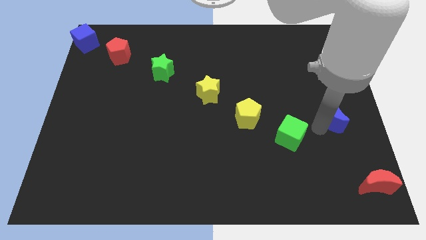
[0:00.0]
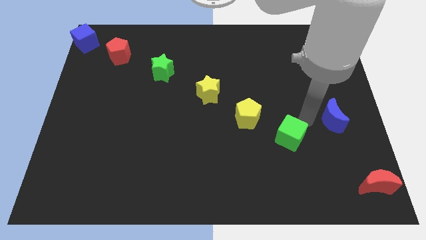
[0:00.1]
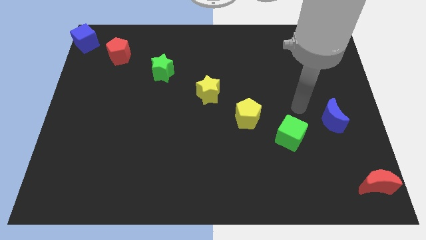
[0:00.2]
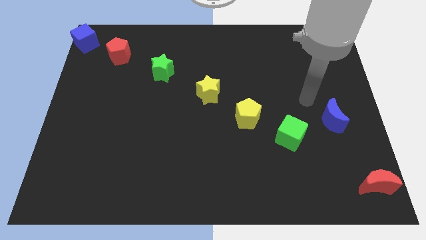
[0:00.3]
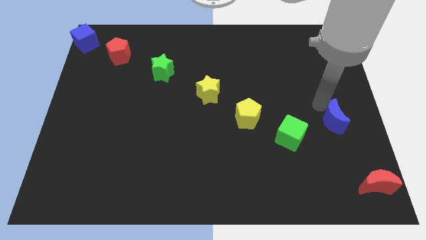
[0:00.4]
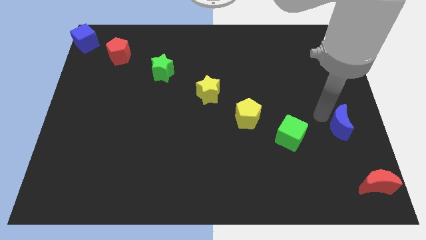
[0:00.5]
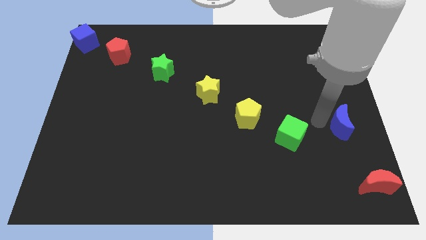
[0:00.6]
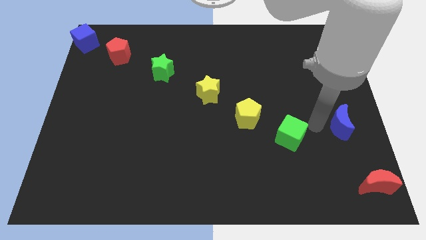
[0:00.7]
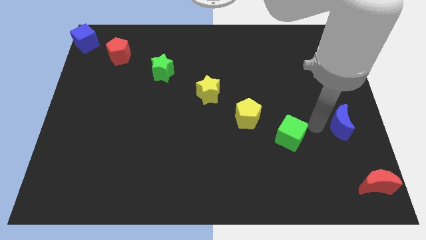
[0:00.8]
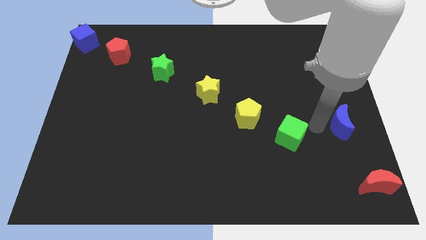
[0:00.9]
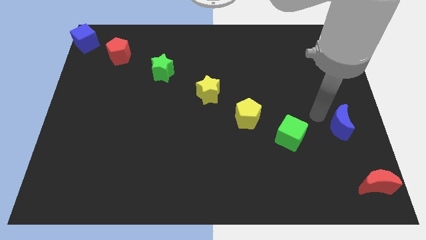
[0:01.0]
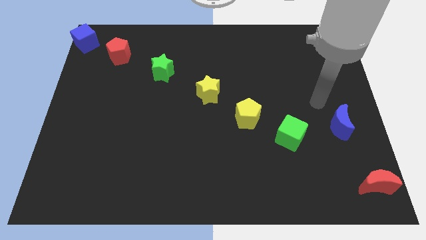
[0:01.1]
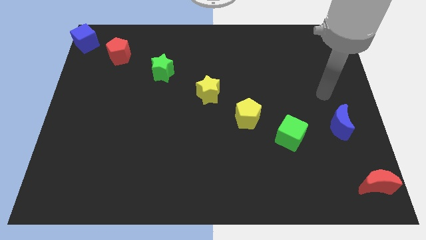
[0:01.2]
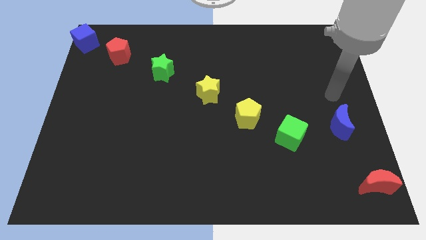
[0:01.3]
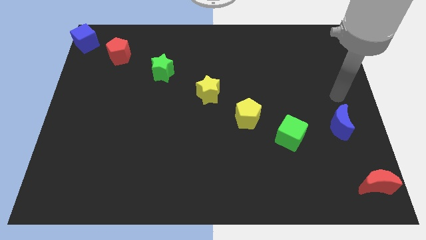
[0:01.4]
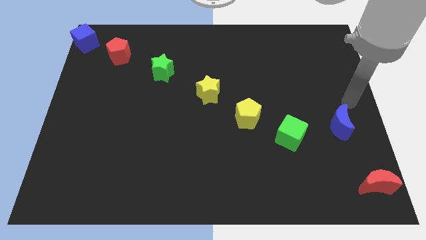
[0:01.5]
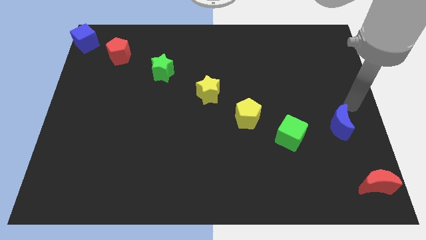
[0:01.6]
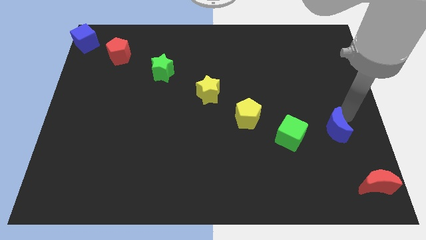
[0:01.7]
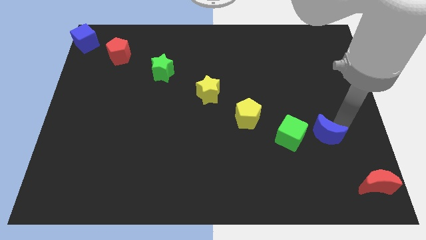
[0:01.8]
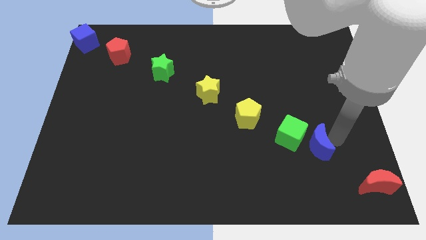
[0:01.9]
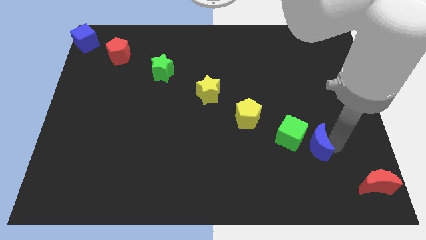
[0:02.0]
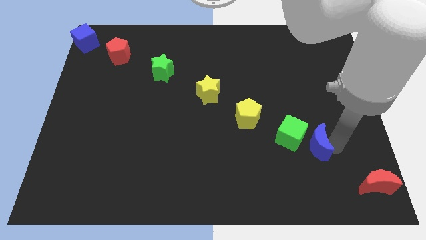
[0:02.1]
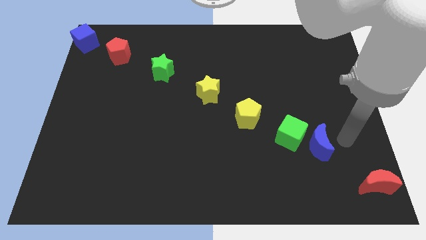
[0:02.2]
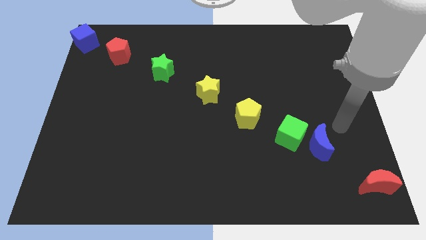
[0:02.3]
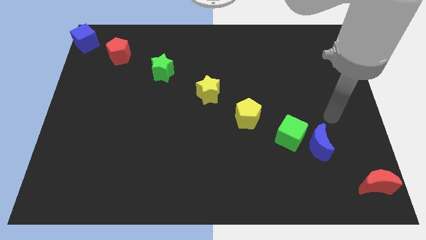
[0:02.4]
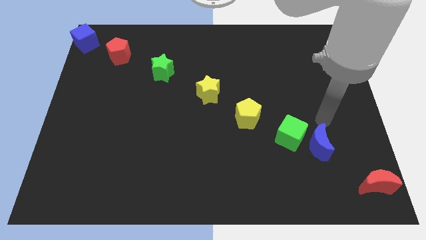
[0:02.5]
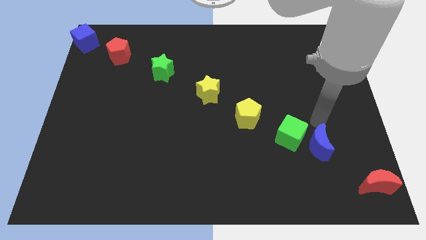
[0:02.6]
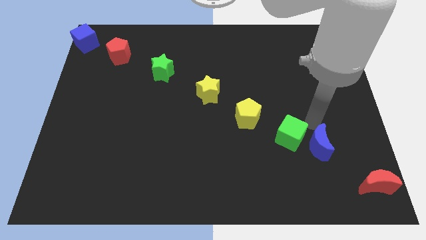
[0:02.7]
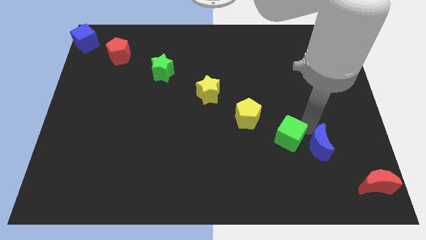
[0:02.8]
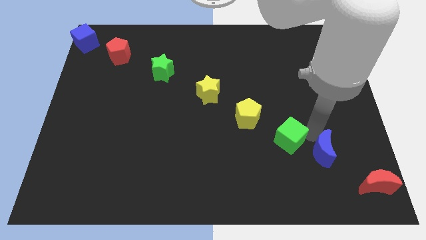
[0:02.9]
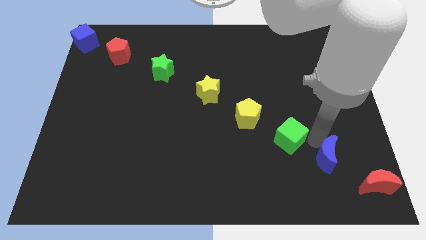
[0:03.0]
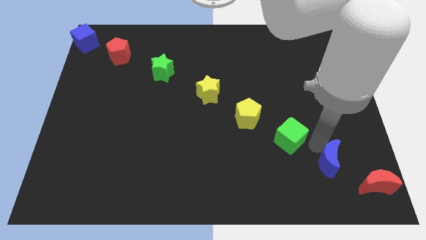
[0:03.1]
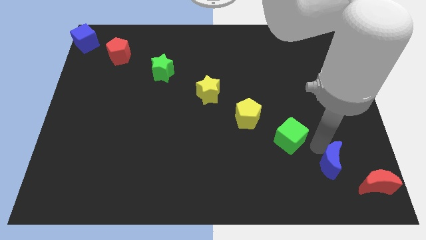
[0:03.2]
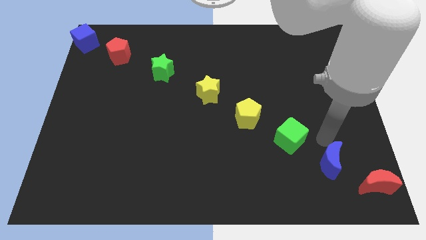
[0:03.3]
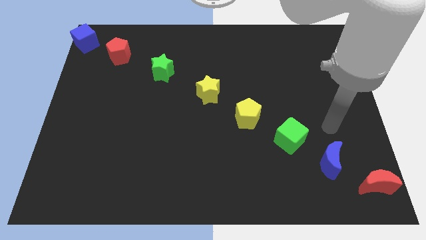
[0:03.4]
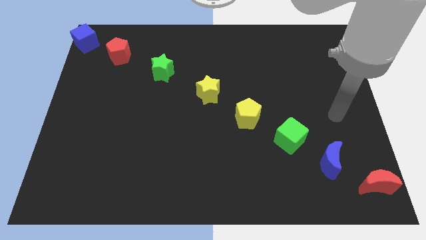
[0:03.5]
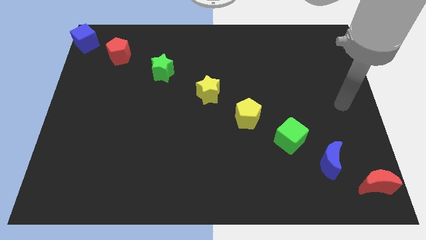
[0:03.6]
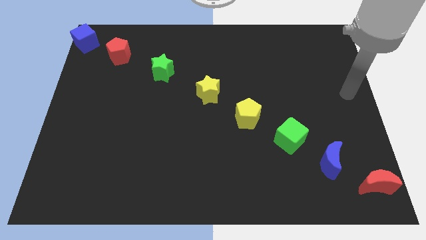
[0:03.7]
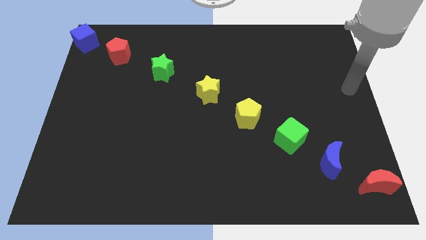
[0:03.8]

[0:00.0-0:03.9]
place the blue crescent in between the red crescent and the green cube

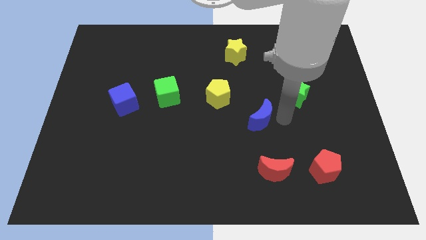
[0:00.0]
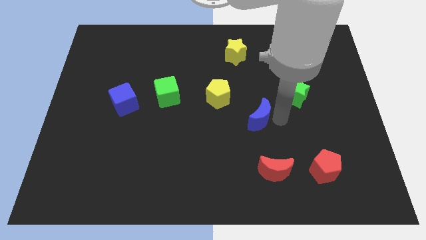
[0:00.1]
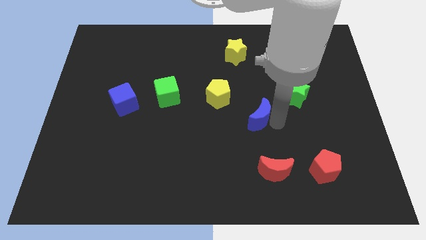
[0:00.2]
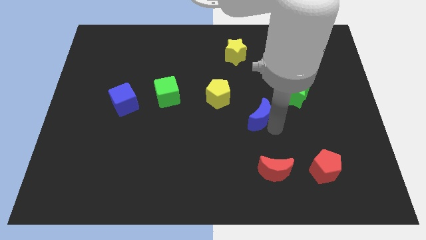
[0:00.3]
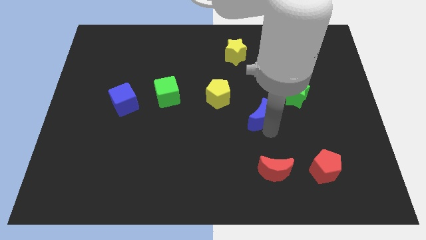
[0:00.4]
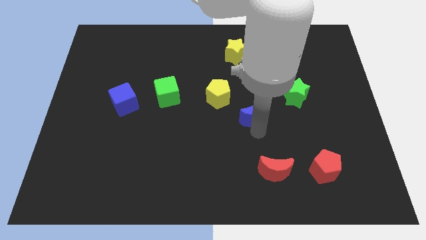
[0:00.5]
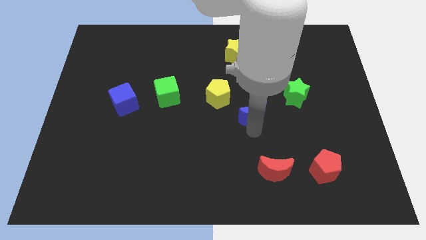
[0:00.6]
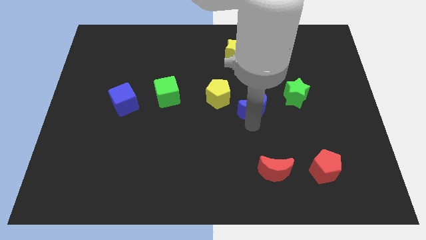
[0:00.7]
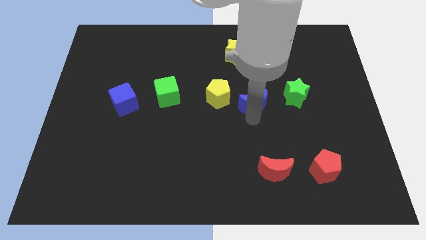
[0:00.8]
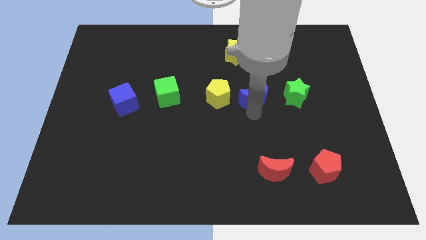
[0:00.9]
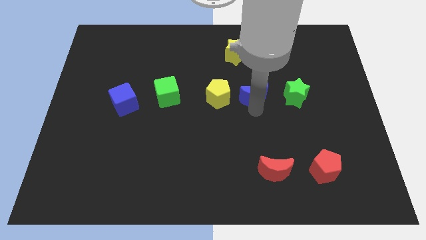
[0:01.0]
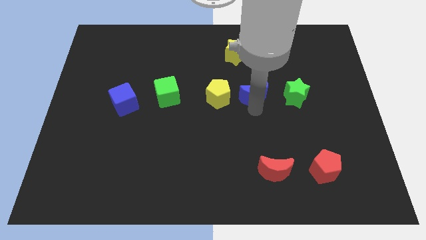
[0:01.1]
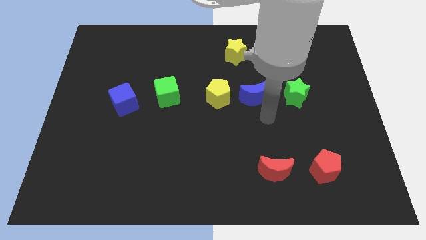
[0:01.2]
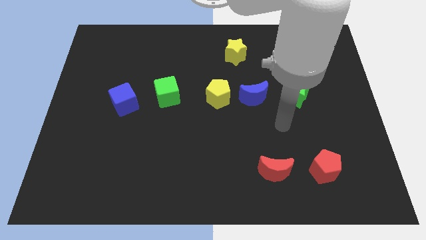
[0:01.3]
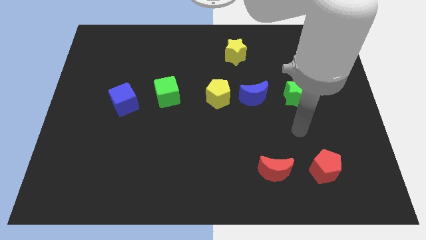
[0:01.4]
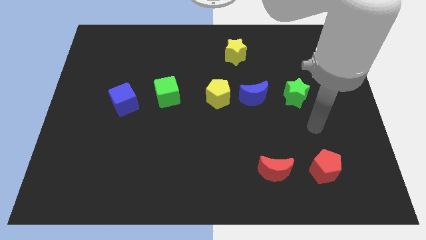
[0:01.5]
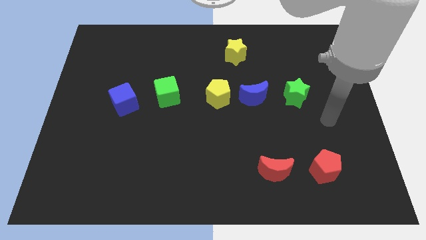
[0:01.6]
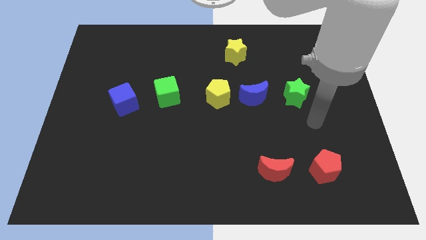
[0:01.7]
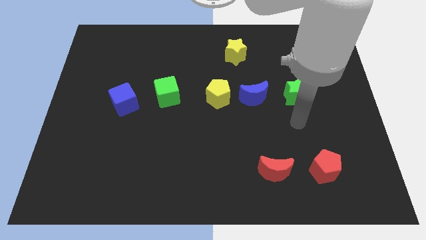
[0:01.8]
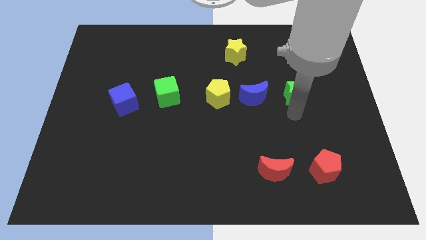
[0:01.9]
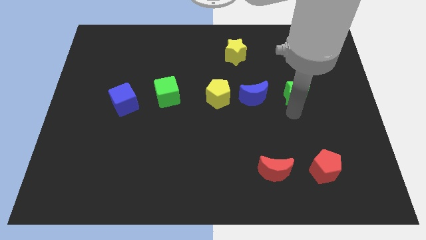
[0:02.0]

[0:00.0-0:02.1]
push blue crescent in between yellow pentagon and green star

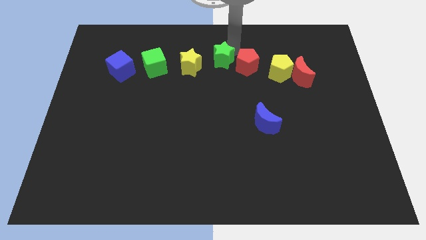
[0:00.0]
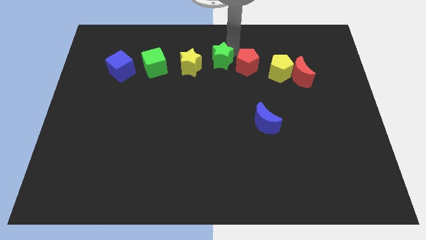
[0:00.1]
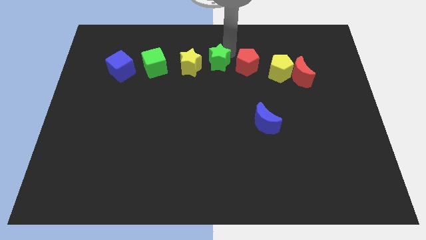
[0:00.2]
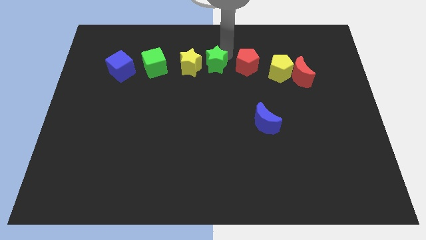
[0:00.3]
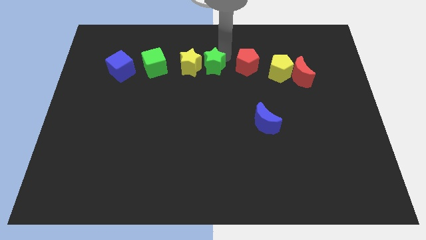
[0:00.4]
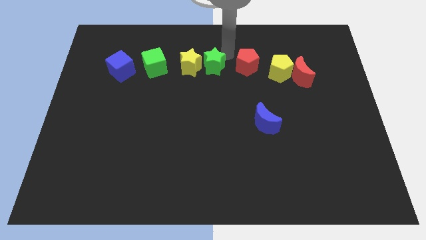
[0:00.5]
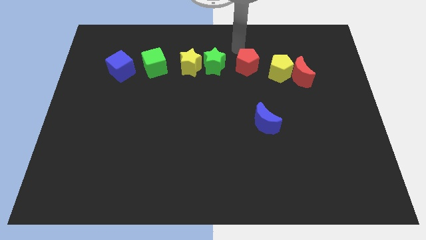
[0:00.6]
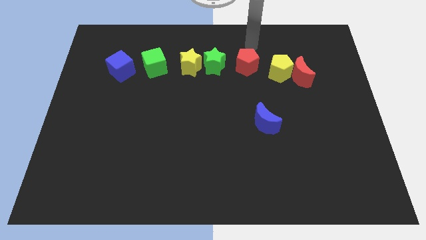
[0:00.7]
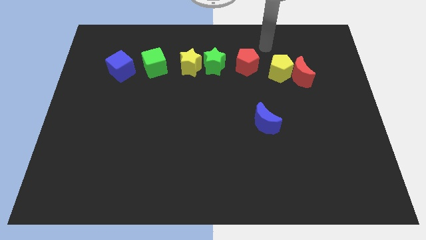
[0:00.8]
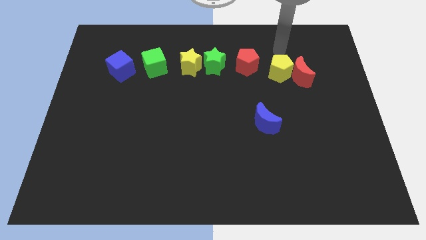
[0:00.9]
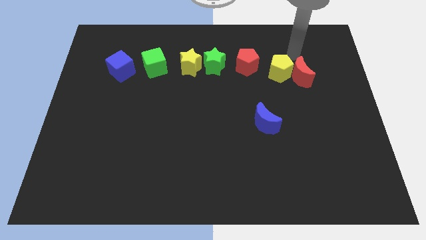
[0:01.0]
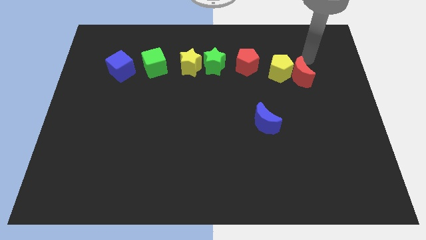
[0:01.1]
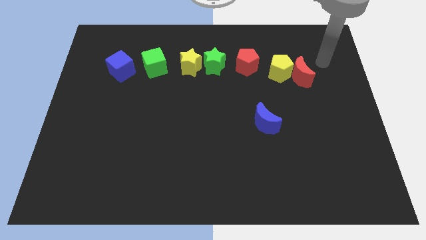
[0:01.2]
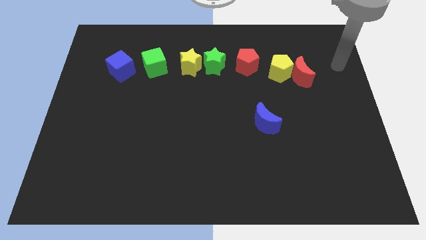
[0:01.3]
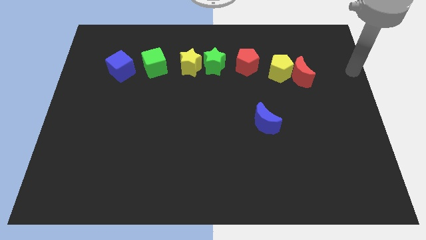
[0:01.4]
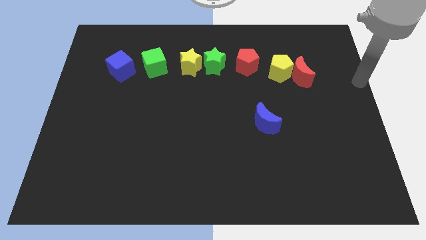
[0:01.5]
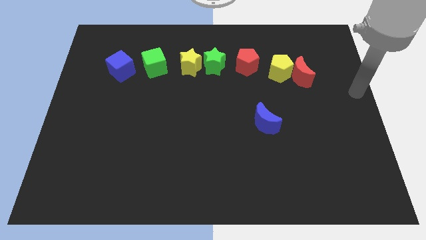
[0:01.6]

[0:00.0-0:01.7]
place the green star towards the right side of the yellow star

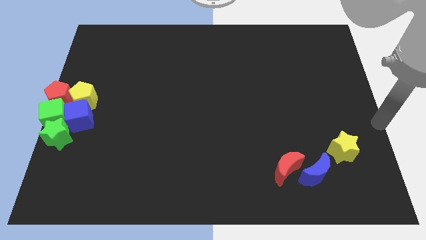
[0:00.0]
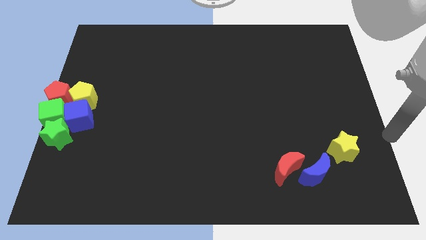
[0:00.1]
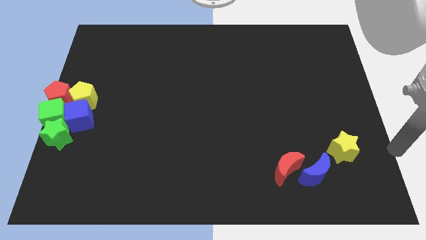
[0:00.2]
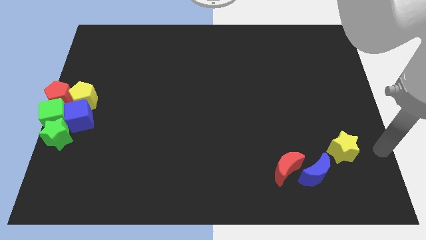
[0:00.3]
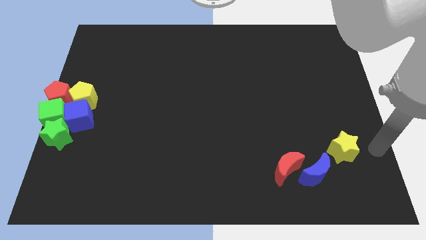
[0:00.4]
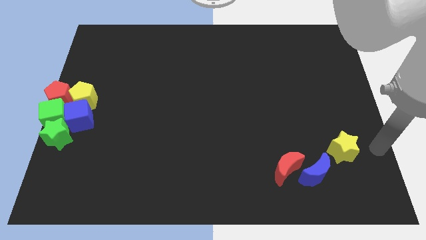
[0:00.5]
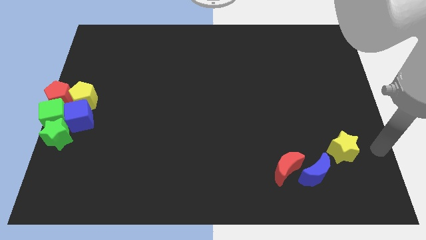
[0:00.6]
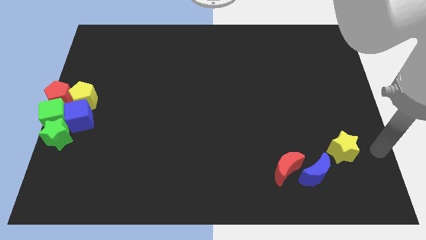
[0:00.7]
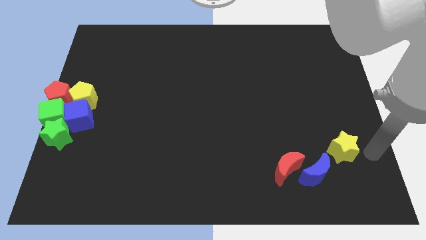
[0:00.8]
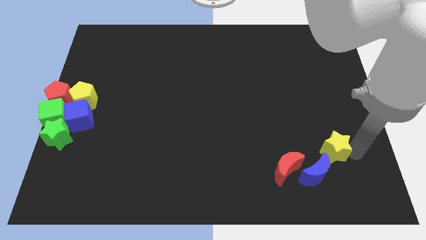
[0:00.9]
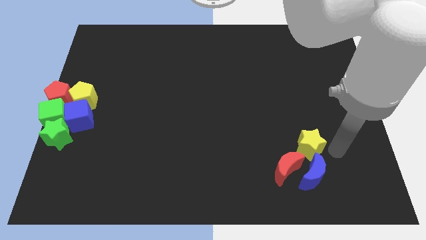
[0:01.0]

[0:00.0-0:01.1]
place the arm right to the yellow star

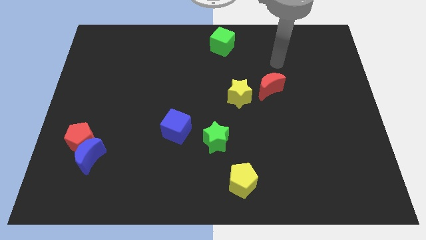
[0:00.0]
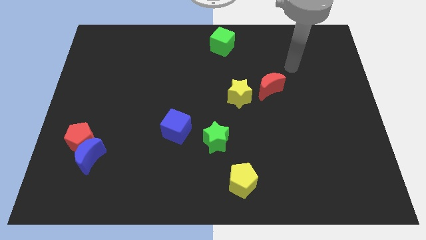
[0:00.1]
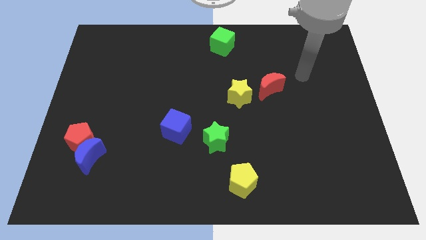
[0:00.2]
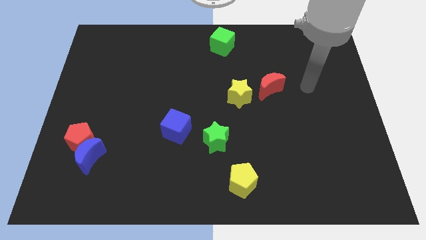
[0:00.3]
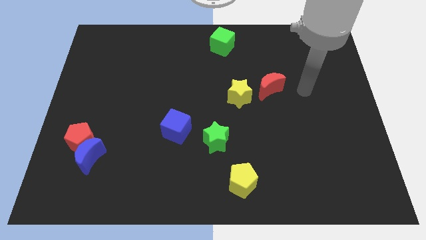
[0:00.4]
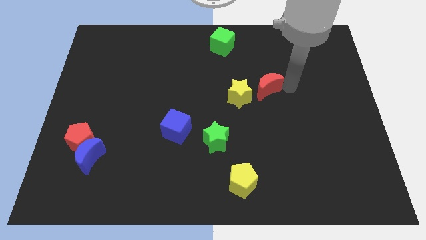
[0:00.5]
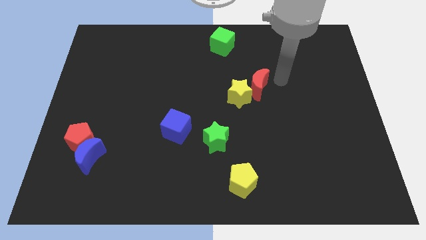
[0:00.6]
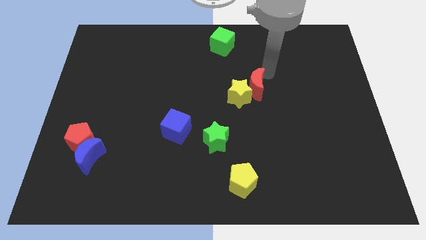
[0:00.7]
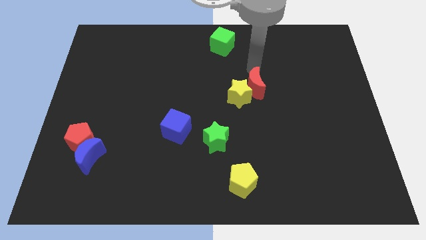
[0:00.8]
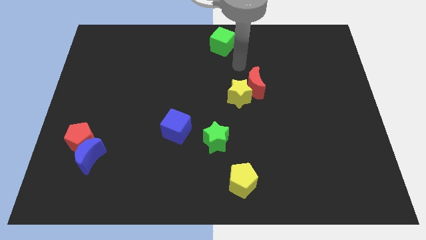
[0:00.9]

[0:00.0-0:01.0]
push the red crescent into the yellow star
